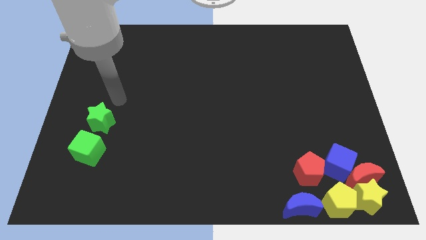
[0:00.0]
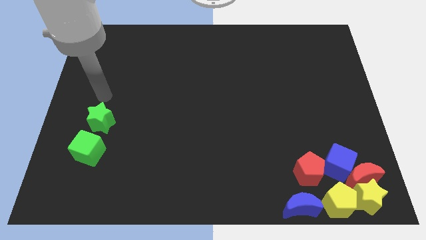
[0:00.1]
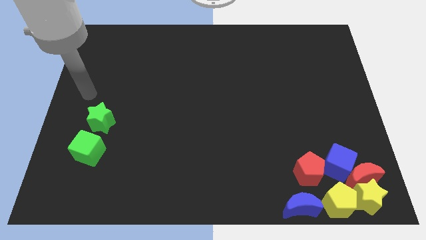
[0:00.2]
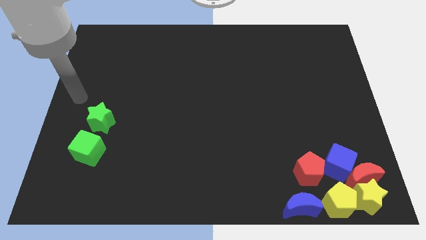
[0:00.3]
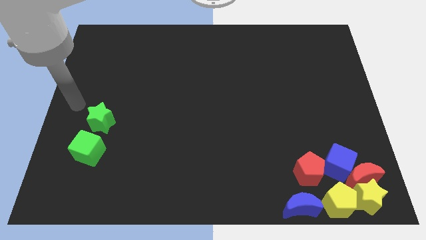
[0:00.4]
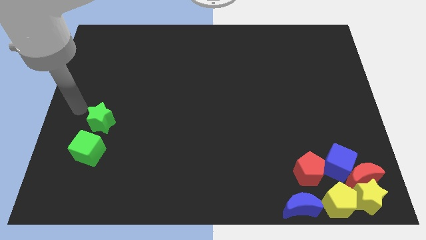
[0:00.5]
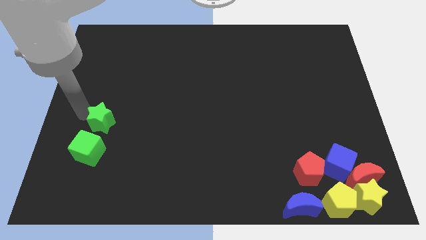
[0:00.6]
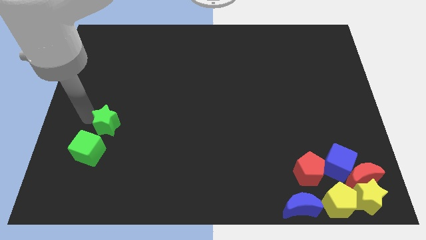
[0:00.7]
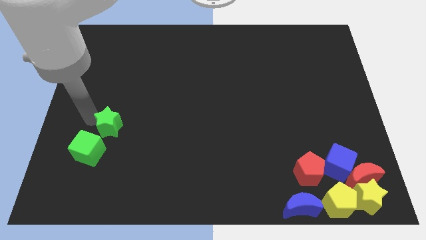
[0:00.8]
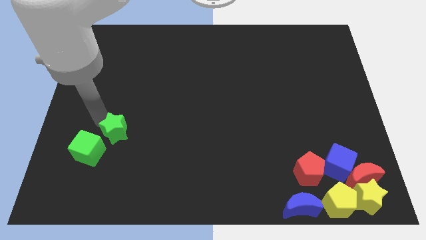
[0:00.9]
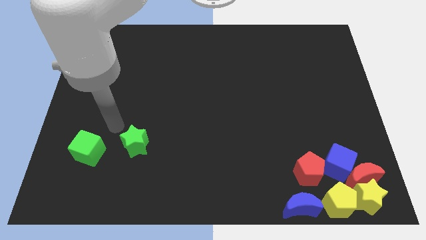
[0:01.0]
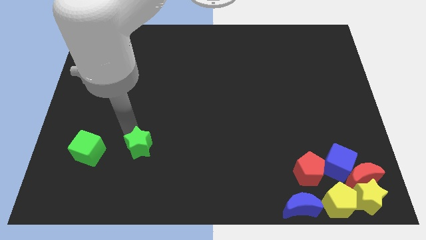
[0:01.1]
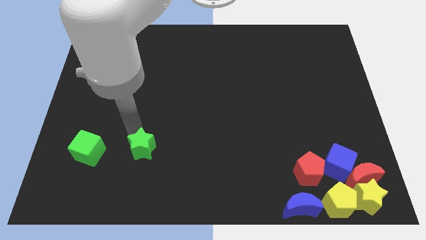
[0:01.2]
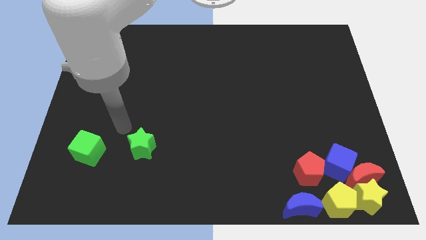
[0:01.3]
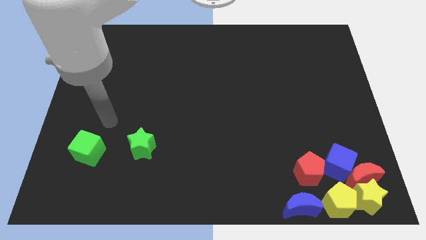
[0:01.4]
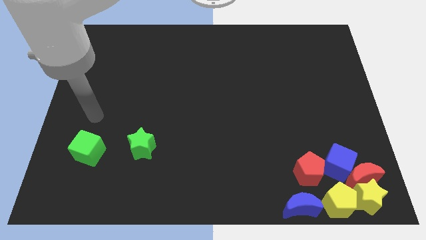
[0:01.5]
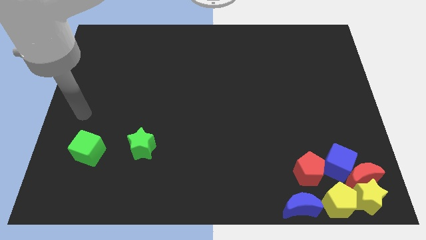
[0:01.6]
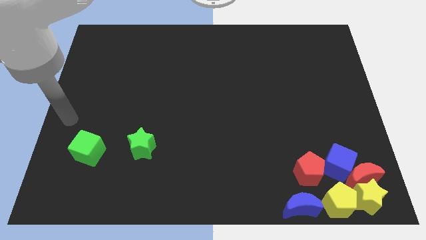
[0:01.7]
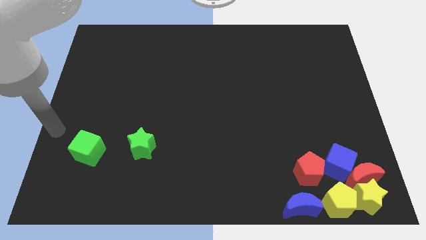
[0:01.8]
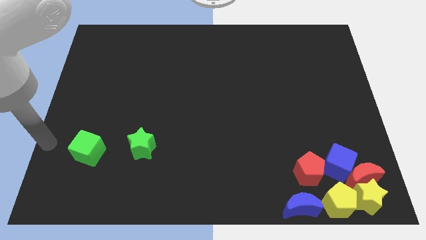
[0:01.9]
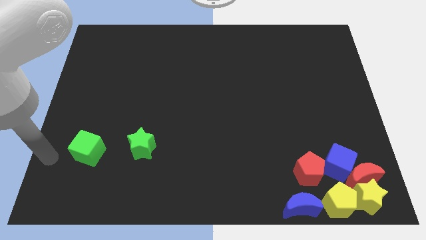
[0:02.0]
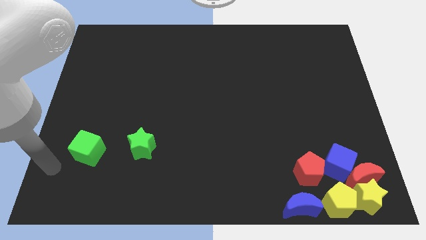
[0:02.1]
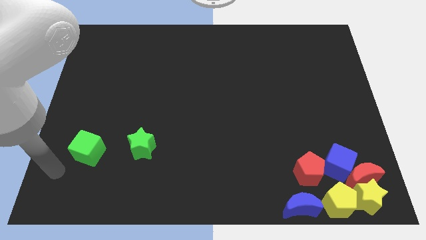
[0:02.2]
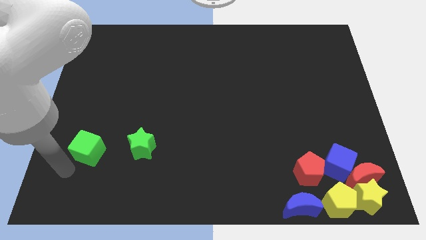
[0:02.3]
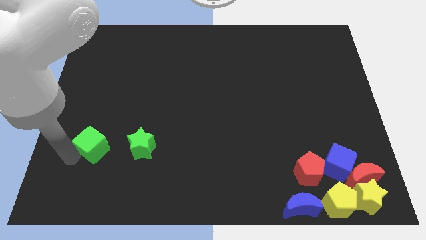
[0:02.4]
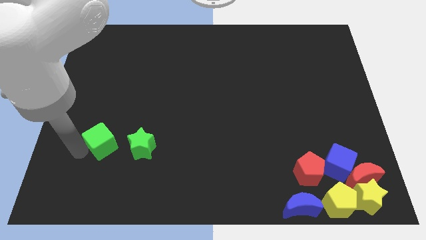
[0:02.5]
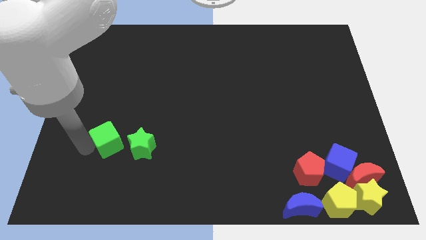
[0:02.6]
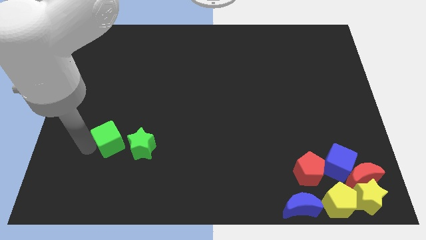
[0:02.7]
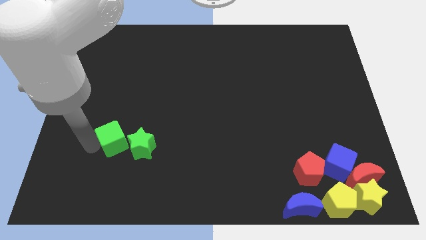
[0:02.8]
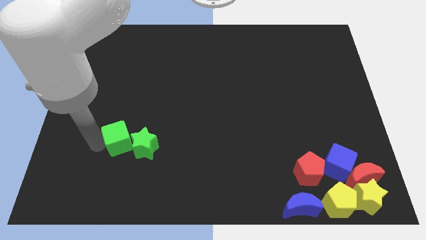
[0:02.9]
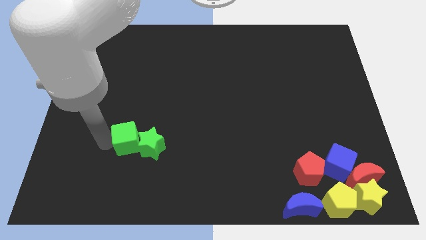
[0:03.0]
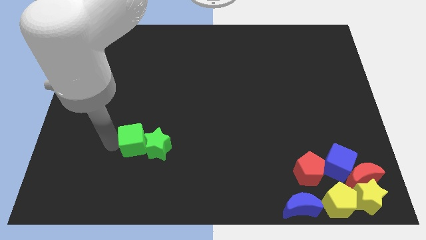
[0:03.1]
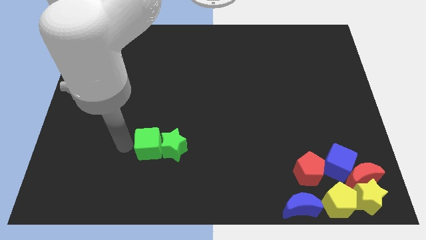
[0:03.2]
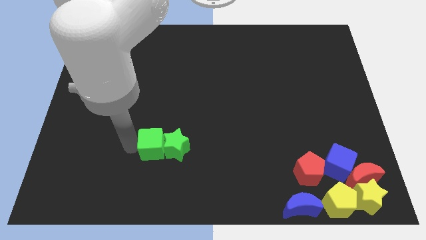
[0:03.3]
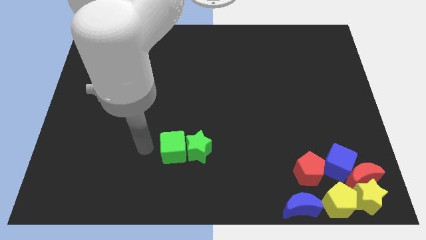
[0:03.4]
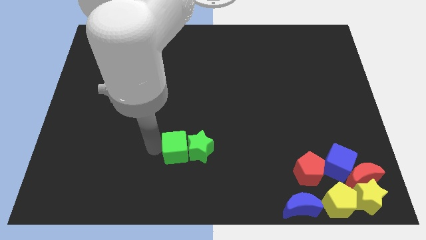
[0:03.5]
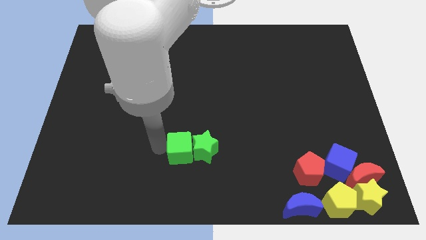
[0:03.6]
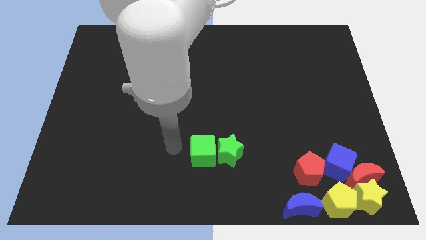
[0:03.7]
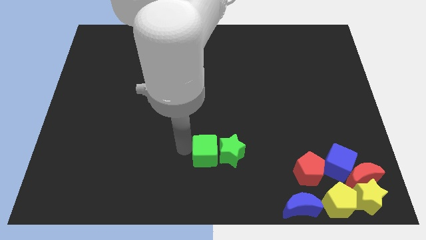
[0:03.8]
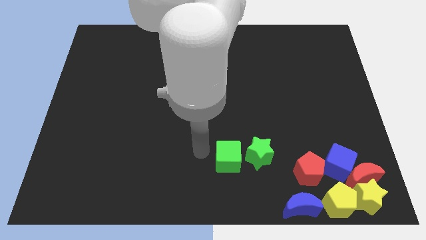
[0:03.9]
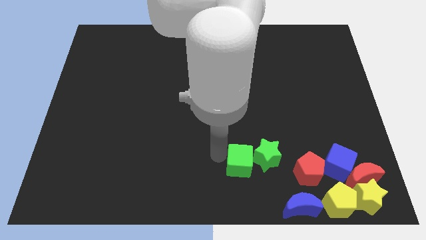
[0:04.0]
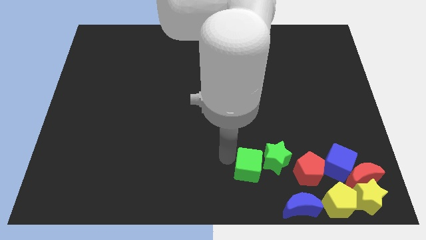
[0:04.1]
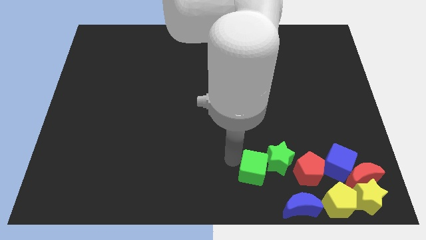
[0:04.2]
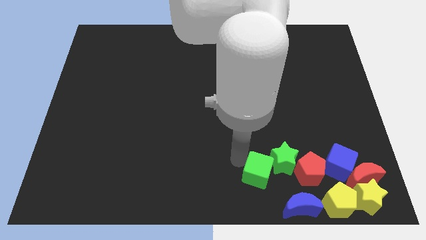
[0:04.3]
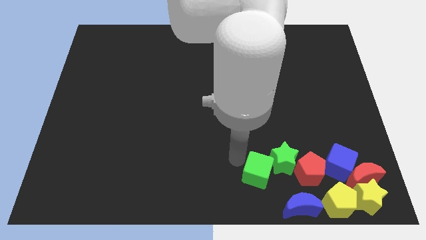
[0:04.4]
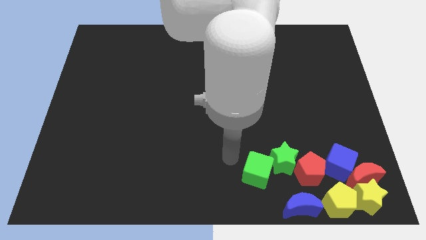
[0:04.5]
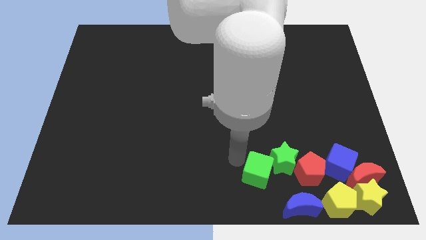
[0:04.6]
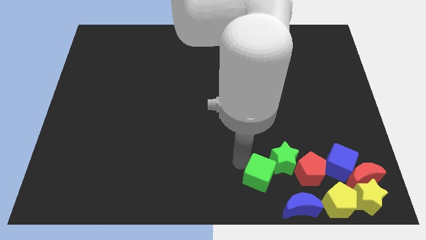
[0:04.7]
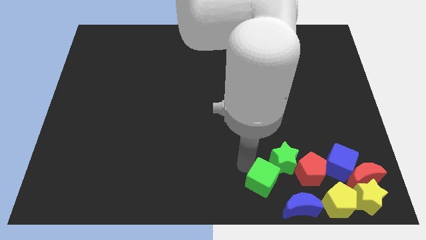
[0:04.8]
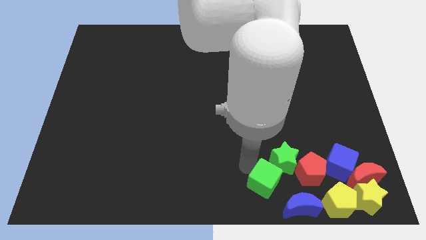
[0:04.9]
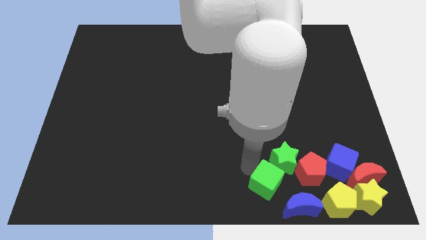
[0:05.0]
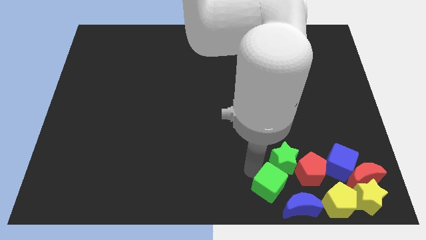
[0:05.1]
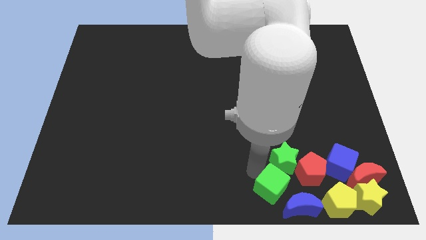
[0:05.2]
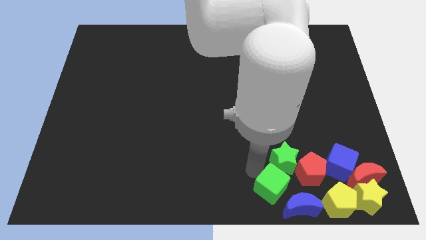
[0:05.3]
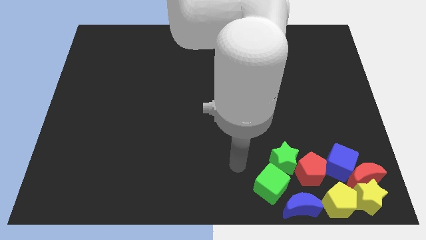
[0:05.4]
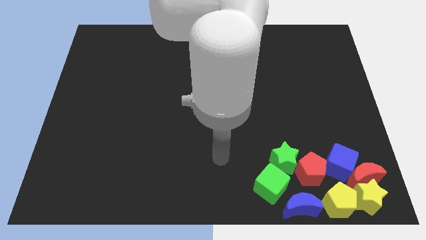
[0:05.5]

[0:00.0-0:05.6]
move the green blocks into the group of blocks

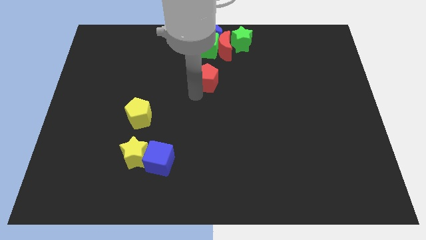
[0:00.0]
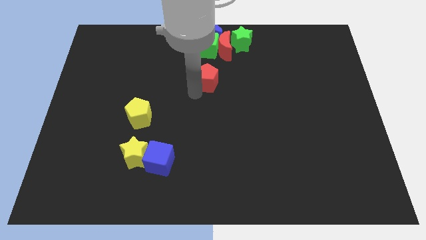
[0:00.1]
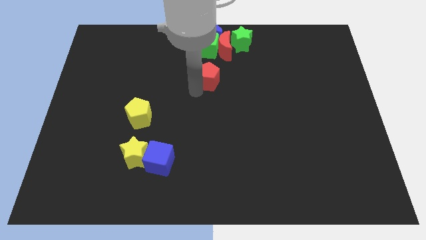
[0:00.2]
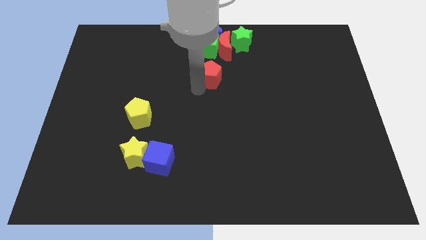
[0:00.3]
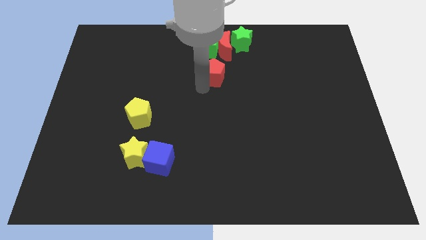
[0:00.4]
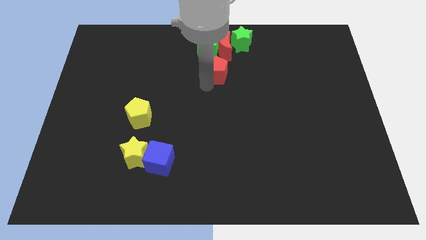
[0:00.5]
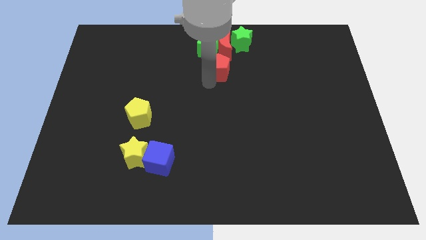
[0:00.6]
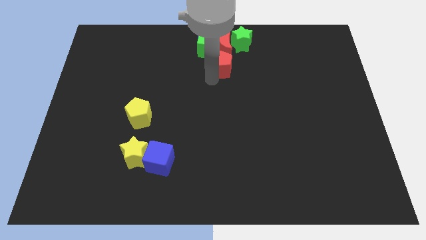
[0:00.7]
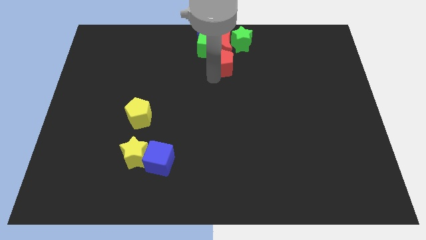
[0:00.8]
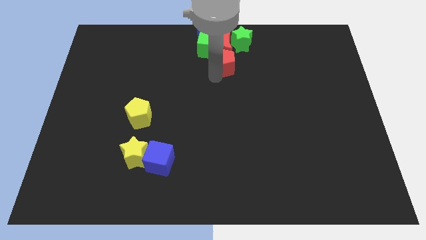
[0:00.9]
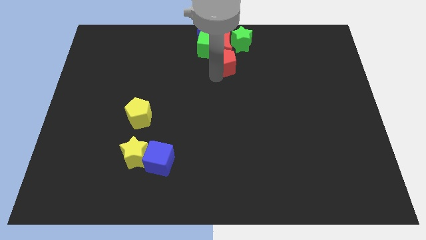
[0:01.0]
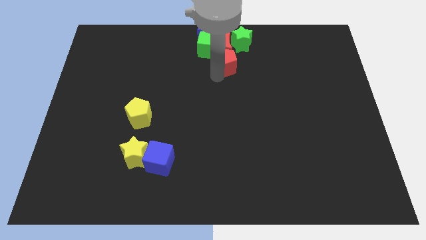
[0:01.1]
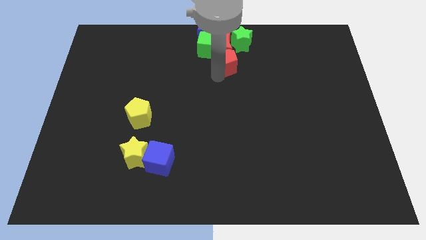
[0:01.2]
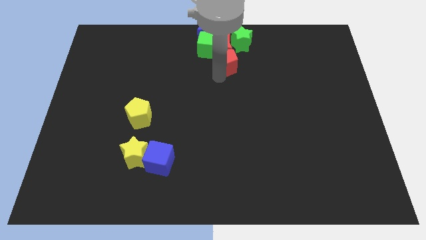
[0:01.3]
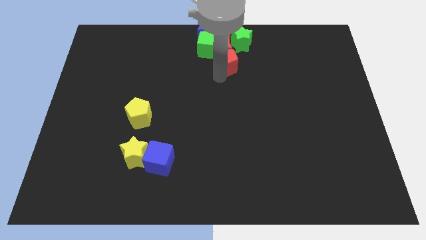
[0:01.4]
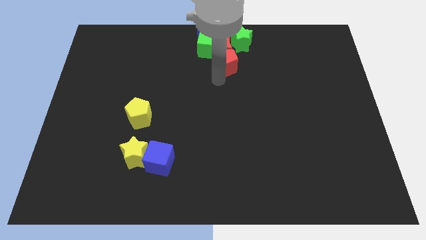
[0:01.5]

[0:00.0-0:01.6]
push the red pentagon below the red crescent

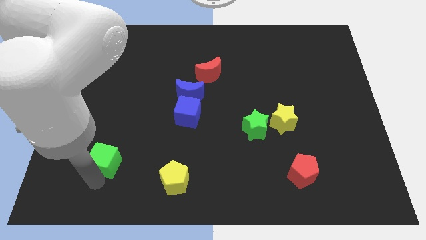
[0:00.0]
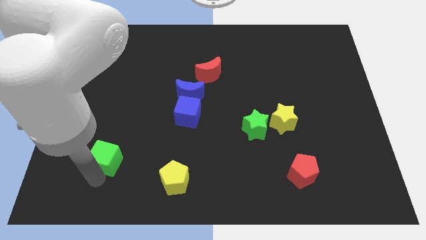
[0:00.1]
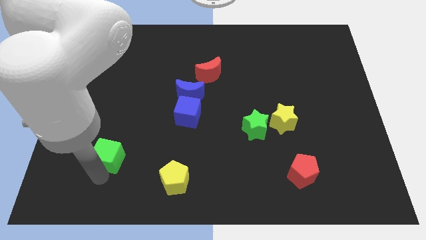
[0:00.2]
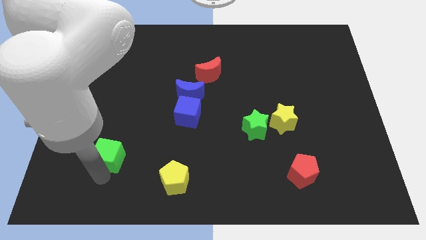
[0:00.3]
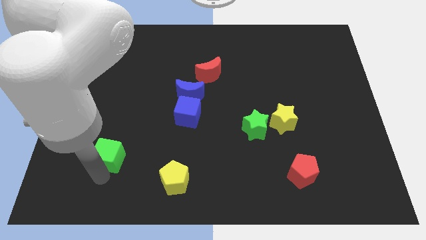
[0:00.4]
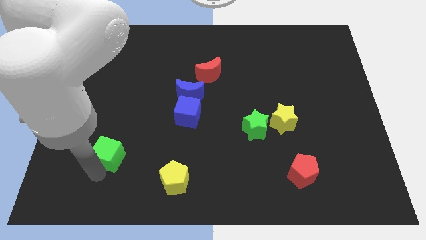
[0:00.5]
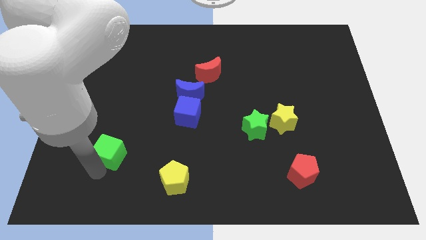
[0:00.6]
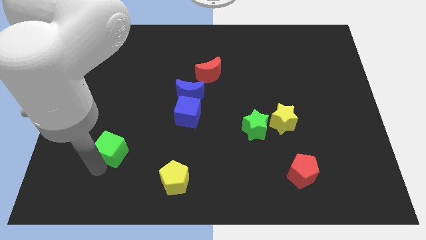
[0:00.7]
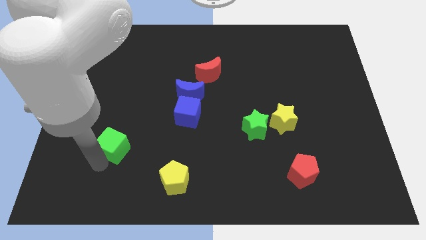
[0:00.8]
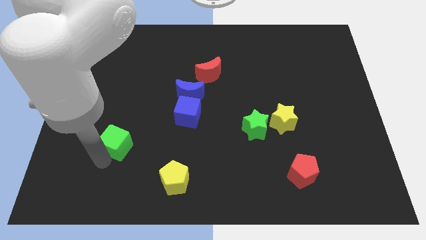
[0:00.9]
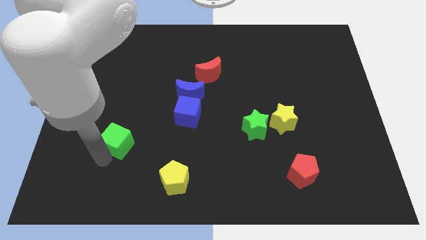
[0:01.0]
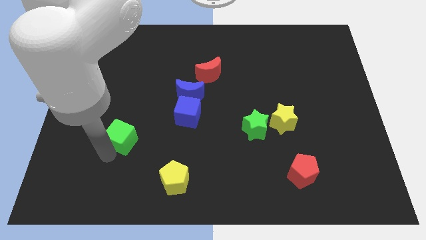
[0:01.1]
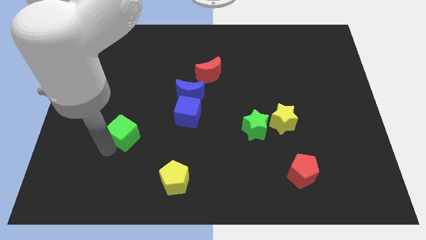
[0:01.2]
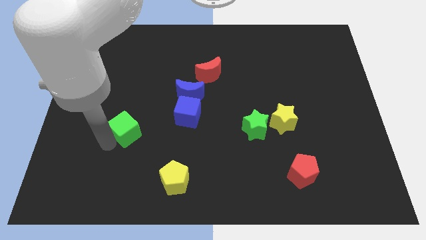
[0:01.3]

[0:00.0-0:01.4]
place the green cube diagonal to the yellow pentagon

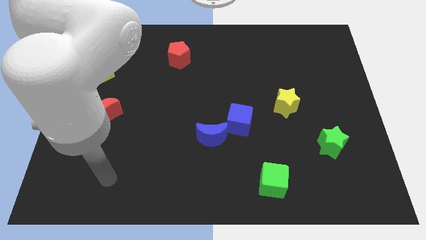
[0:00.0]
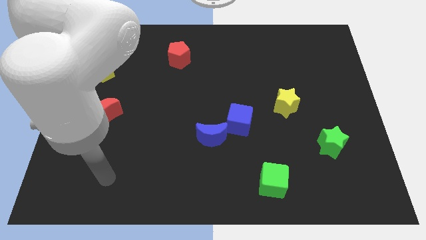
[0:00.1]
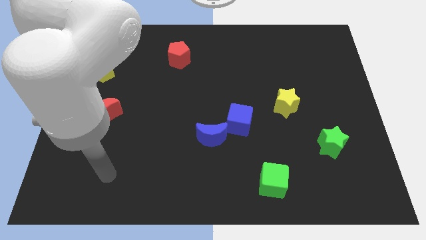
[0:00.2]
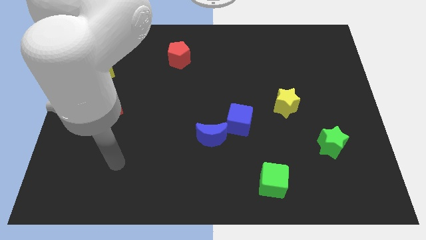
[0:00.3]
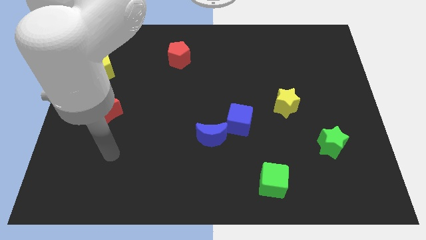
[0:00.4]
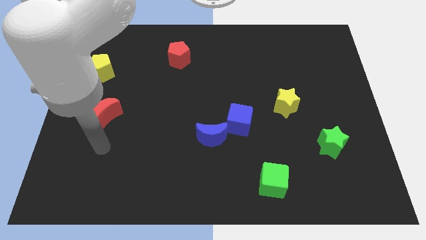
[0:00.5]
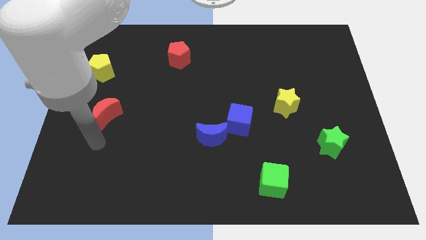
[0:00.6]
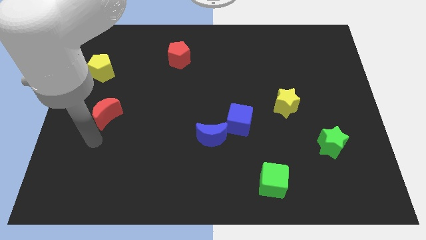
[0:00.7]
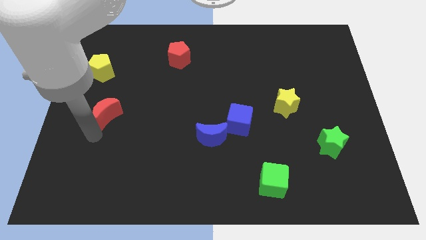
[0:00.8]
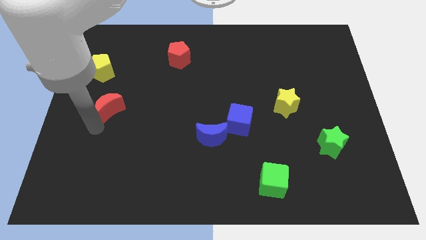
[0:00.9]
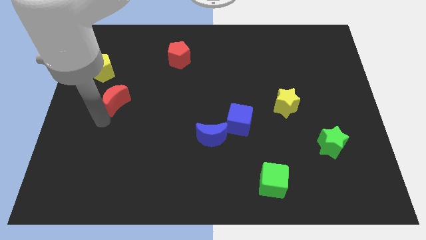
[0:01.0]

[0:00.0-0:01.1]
push red moon towards yellow pentagon
